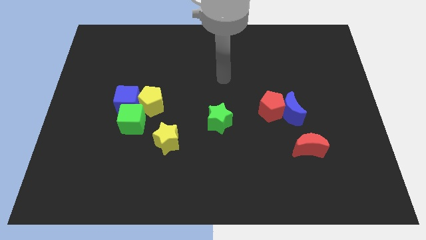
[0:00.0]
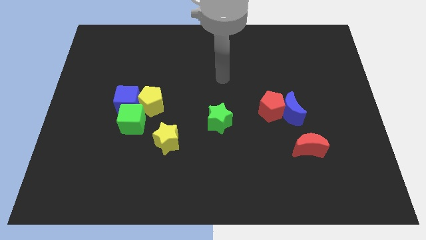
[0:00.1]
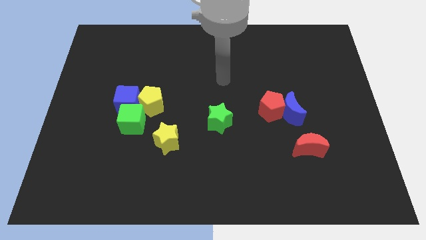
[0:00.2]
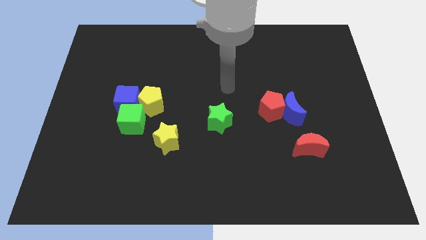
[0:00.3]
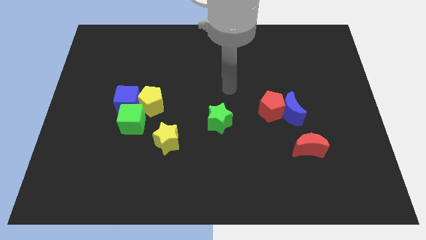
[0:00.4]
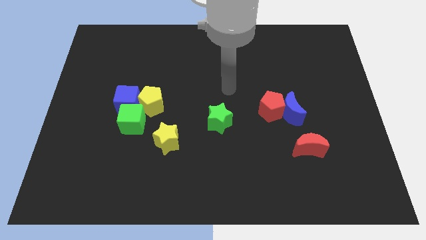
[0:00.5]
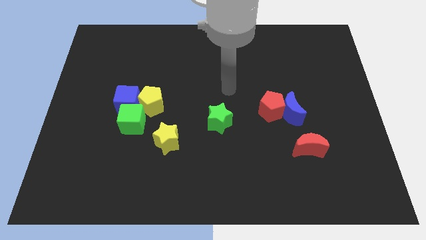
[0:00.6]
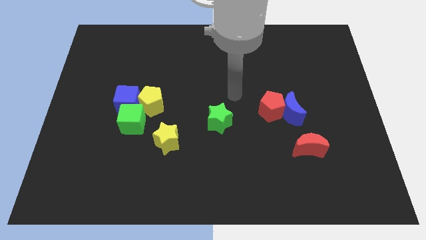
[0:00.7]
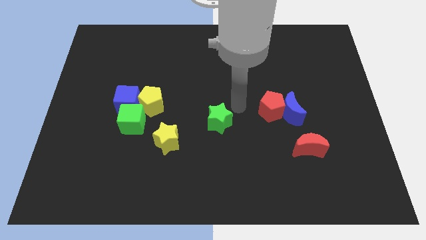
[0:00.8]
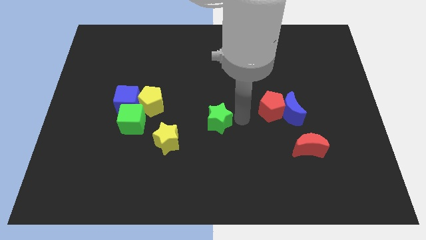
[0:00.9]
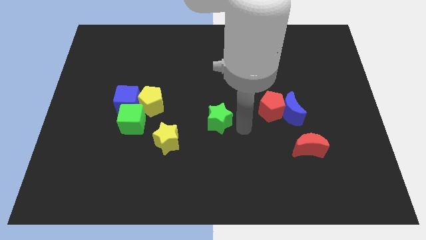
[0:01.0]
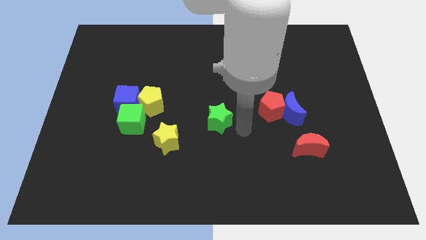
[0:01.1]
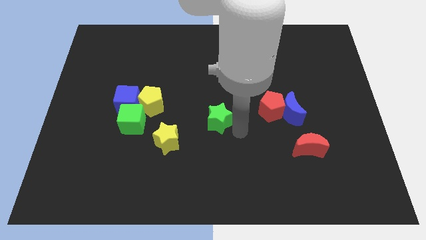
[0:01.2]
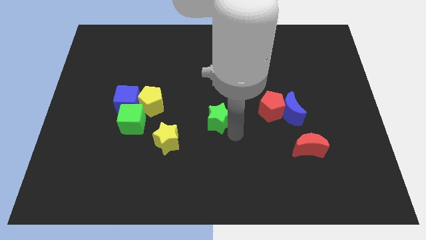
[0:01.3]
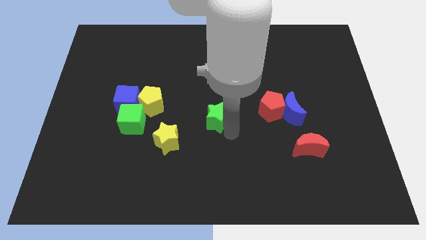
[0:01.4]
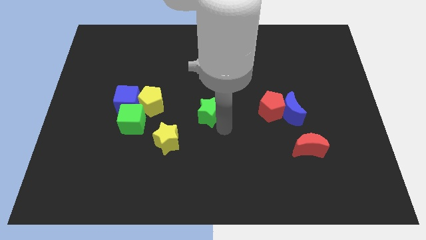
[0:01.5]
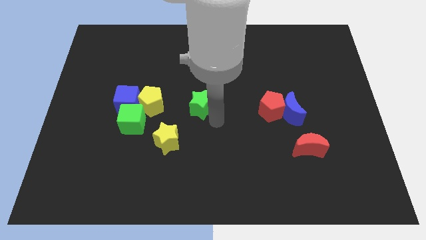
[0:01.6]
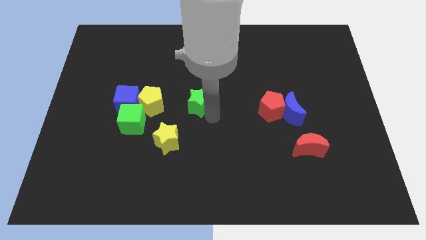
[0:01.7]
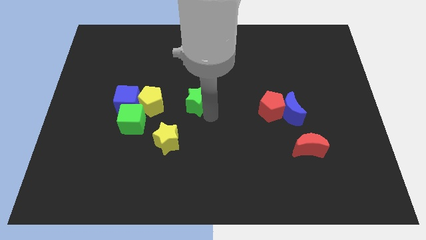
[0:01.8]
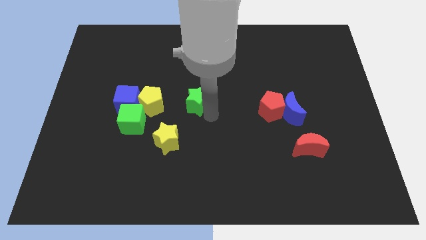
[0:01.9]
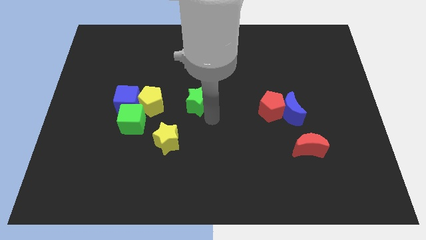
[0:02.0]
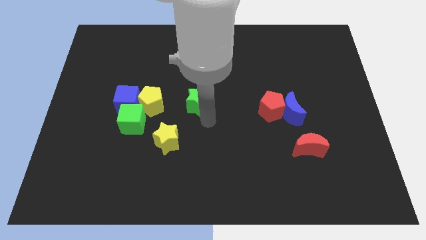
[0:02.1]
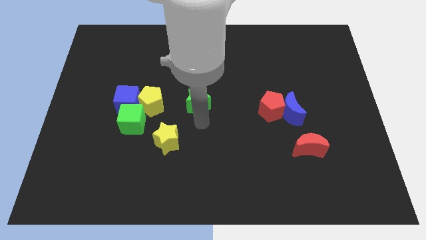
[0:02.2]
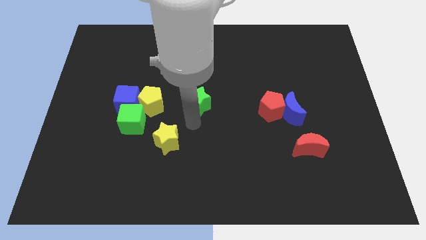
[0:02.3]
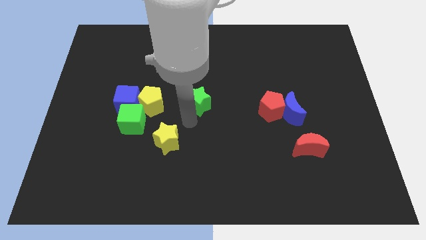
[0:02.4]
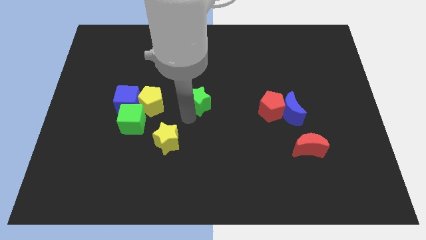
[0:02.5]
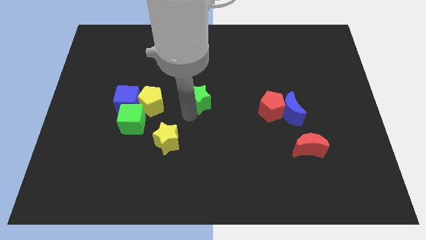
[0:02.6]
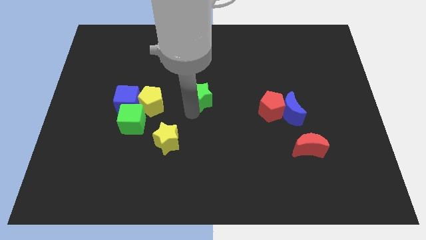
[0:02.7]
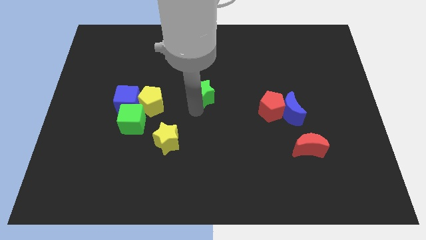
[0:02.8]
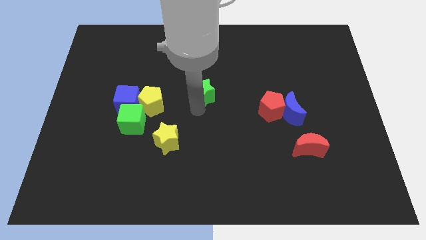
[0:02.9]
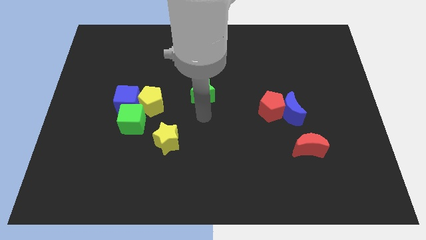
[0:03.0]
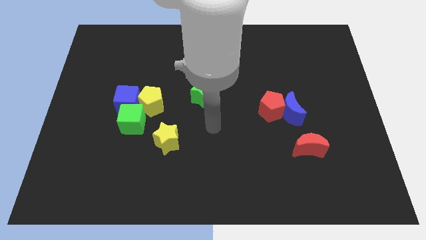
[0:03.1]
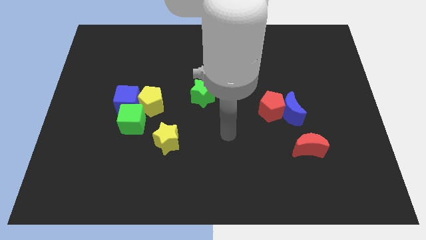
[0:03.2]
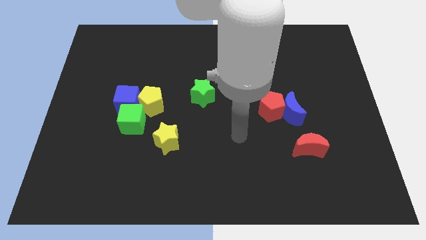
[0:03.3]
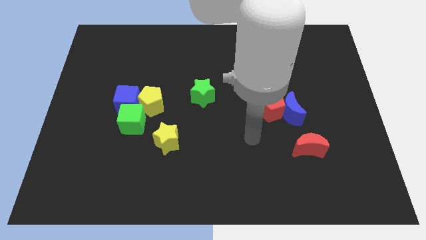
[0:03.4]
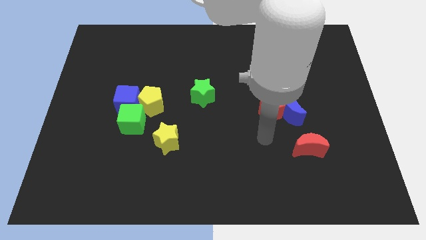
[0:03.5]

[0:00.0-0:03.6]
push green star to the top right of yellow pentagon

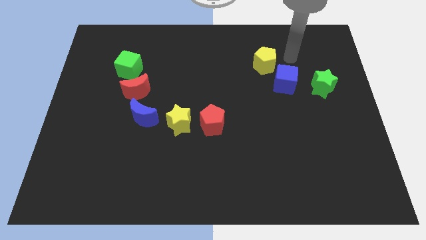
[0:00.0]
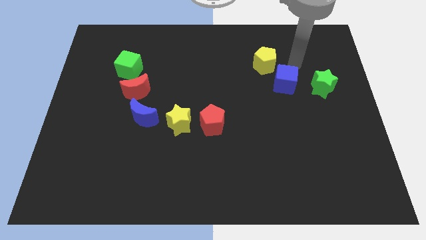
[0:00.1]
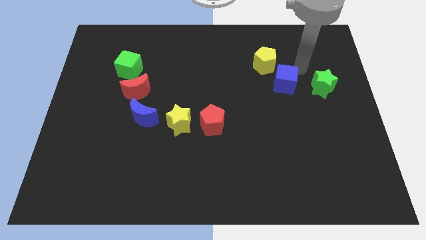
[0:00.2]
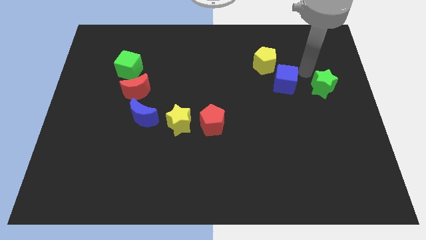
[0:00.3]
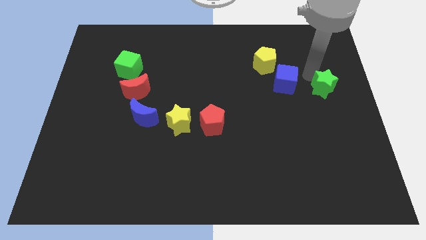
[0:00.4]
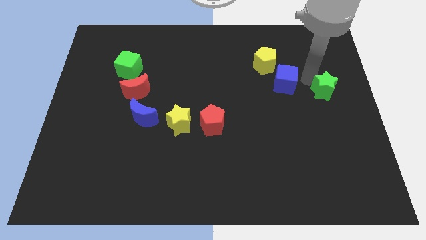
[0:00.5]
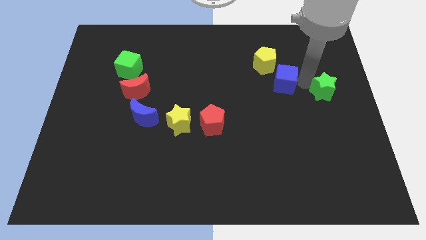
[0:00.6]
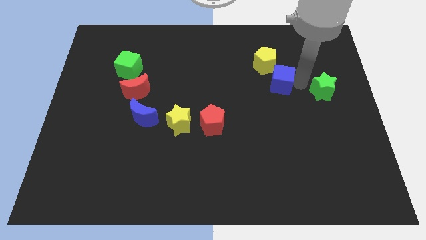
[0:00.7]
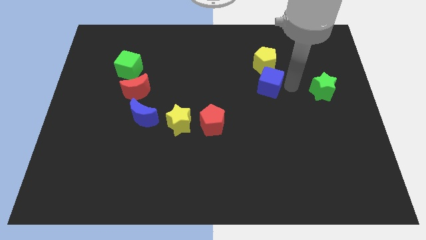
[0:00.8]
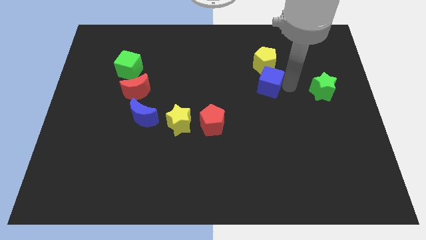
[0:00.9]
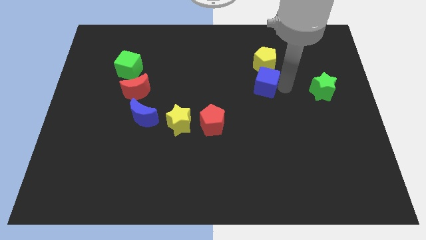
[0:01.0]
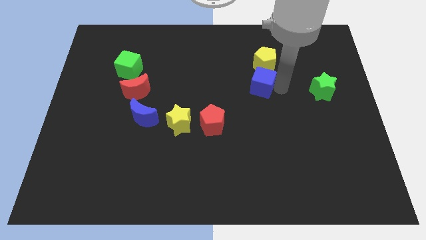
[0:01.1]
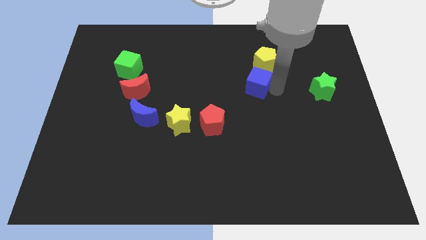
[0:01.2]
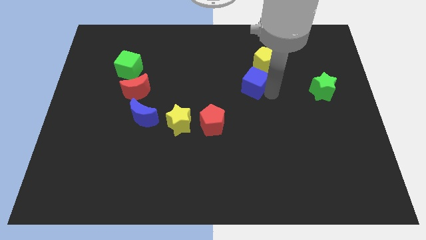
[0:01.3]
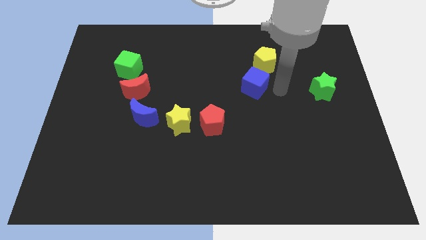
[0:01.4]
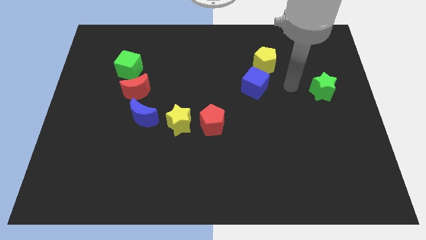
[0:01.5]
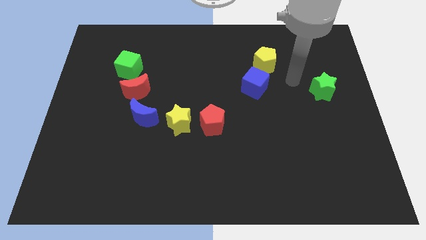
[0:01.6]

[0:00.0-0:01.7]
place the blue cube below the yellow pentagon

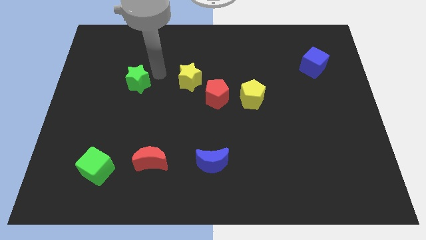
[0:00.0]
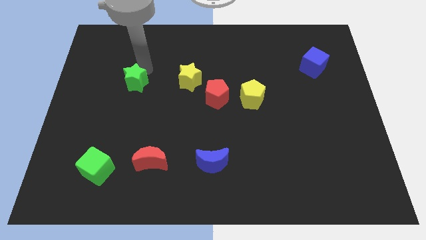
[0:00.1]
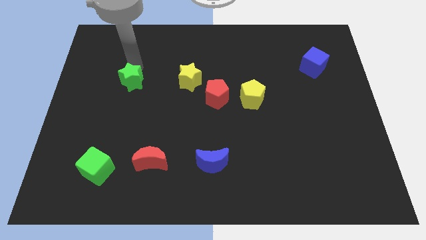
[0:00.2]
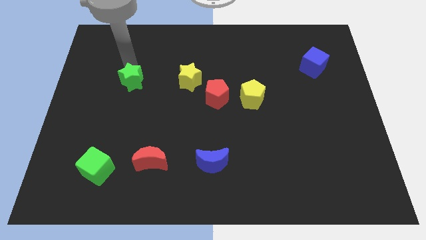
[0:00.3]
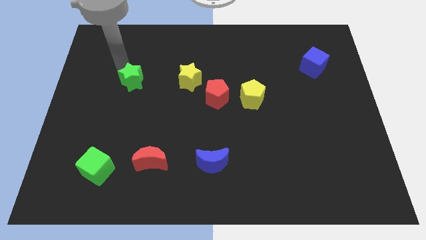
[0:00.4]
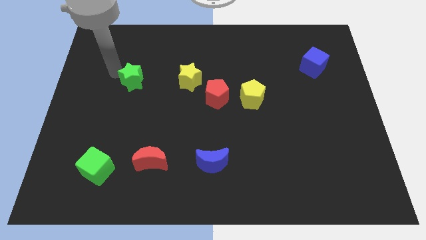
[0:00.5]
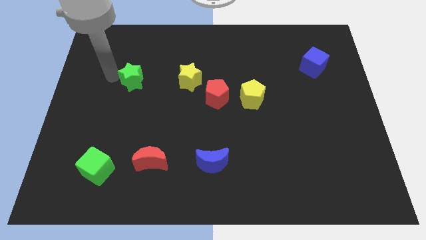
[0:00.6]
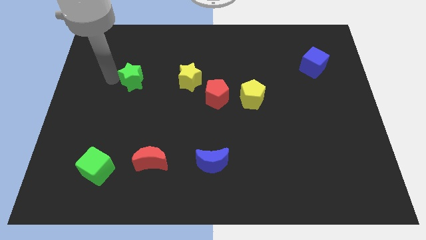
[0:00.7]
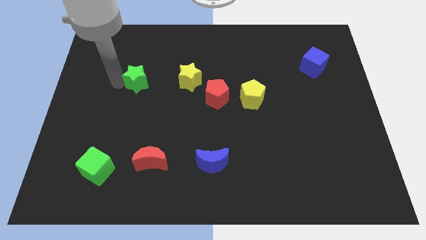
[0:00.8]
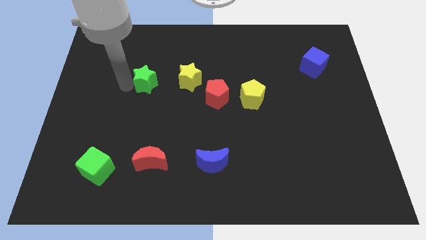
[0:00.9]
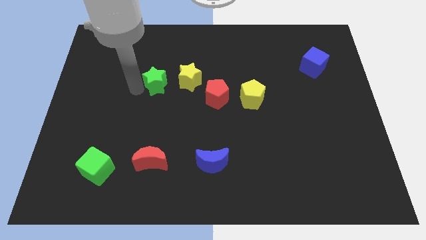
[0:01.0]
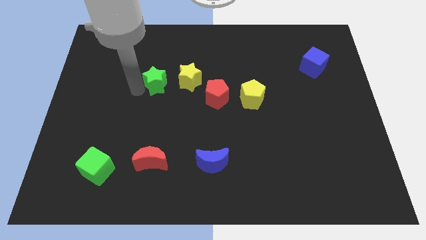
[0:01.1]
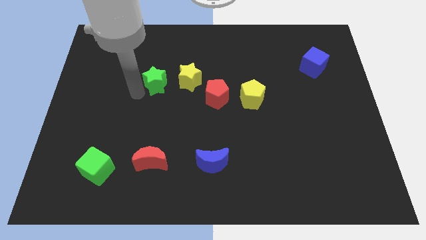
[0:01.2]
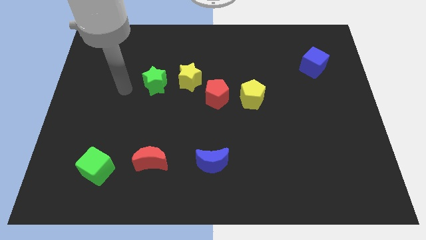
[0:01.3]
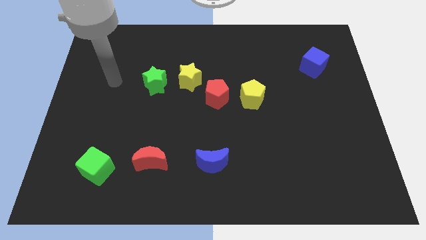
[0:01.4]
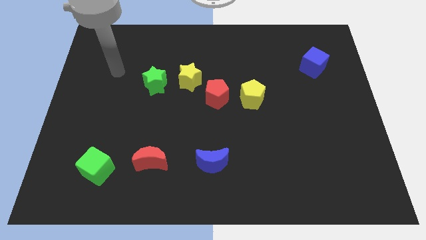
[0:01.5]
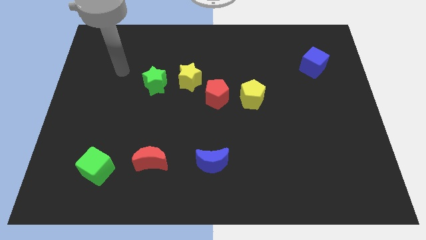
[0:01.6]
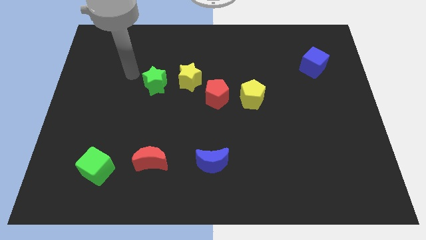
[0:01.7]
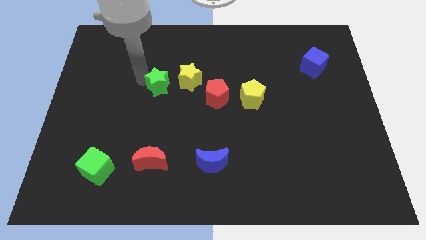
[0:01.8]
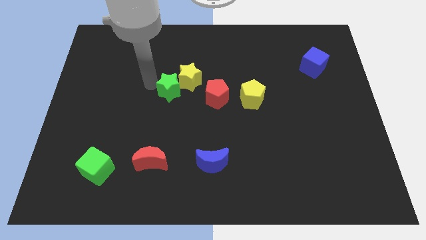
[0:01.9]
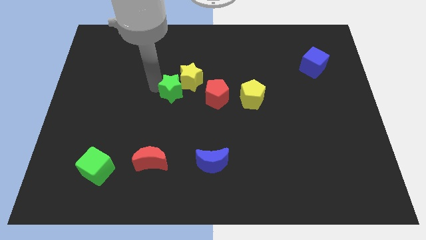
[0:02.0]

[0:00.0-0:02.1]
push the green star into the yellow star

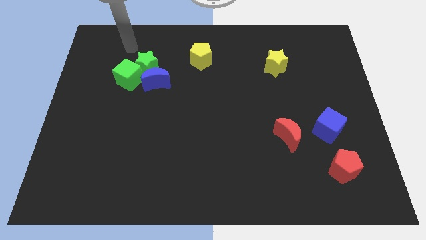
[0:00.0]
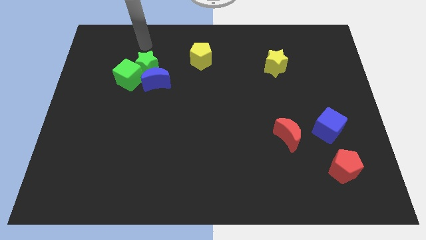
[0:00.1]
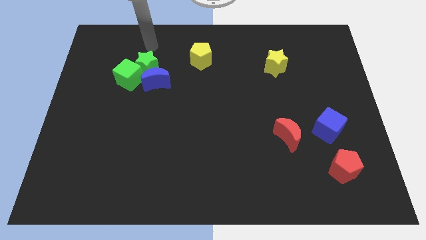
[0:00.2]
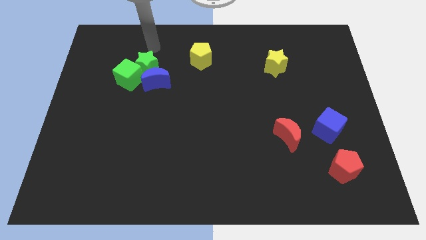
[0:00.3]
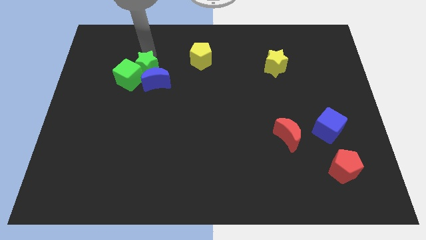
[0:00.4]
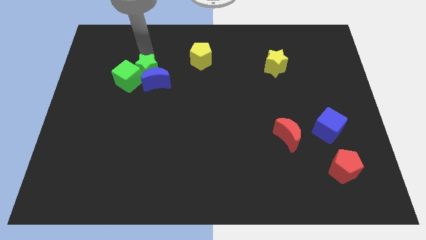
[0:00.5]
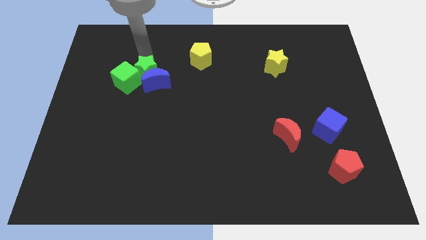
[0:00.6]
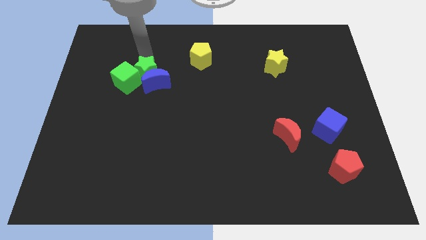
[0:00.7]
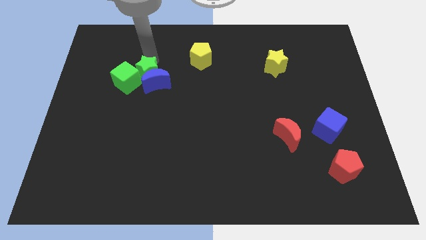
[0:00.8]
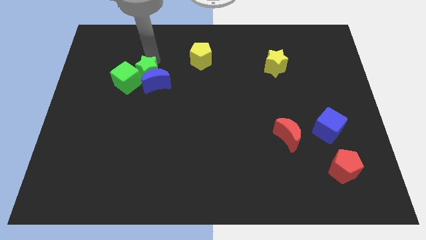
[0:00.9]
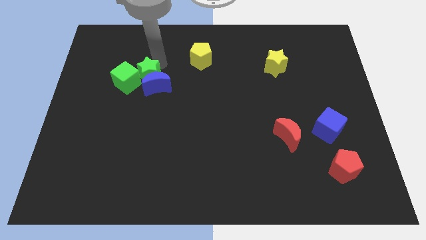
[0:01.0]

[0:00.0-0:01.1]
move the green blocks and blue moon slightly to the bottom

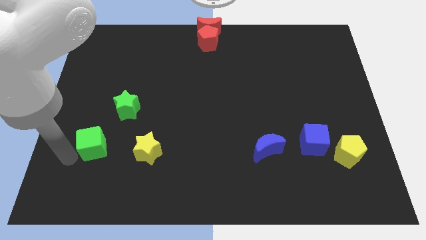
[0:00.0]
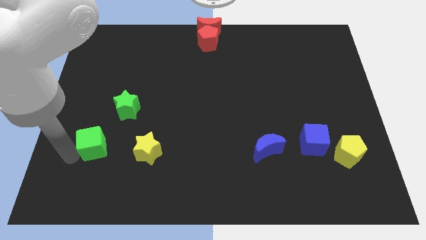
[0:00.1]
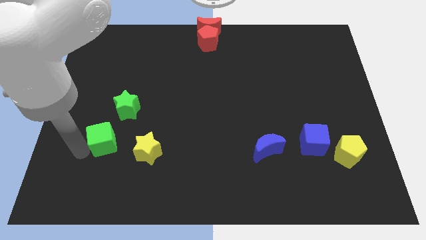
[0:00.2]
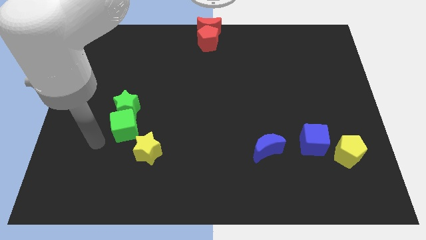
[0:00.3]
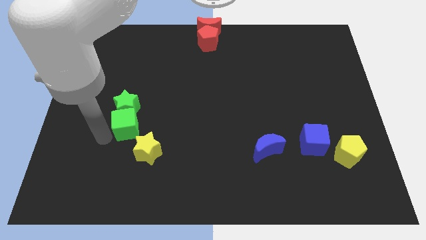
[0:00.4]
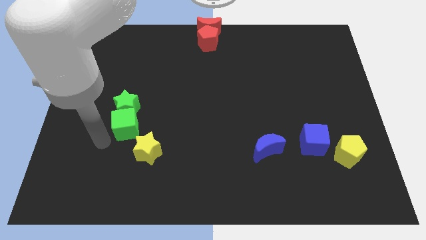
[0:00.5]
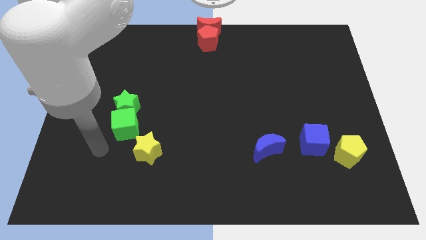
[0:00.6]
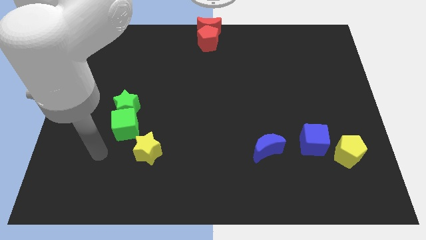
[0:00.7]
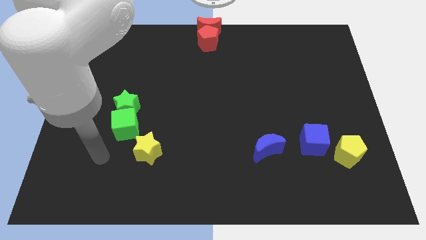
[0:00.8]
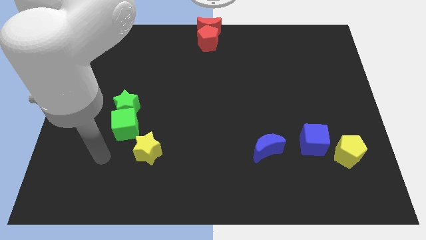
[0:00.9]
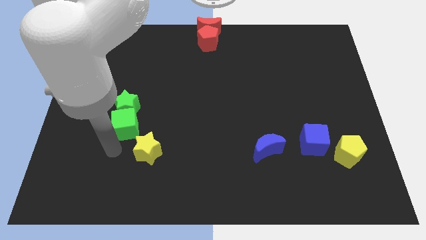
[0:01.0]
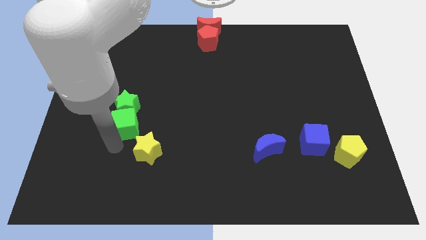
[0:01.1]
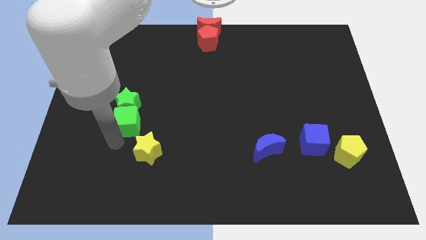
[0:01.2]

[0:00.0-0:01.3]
push green cube in to green star
